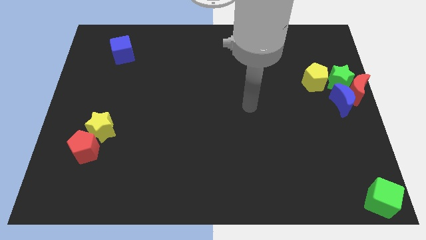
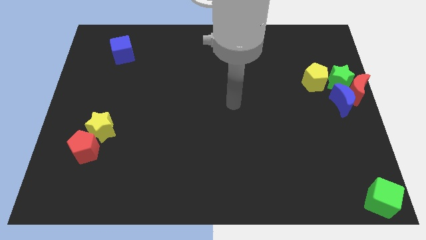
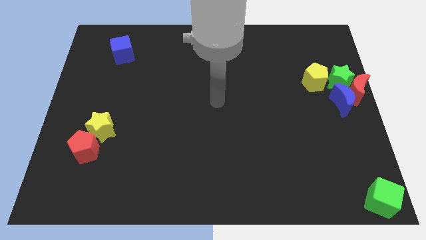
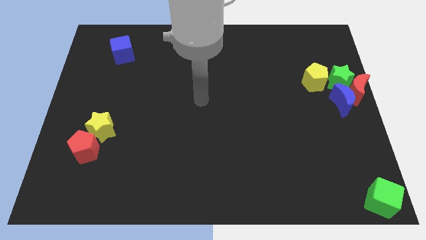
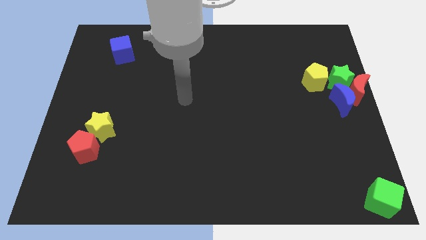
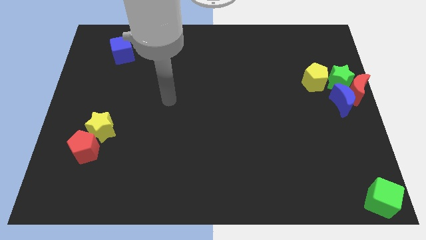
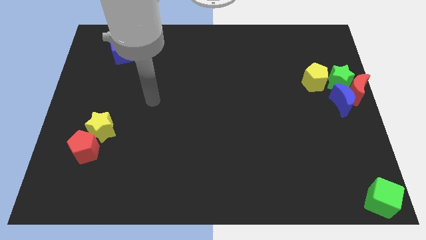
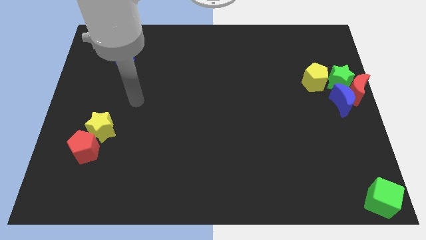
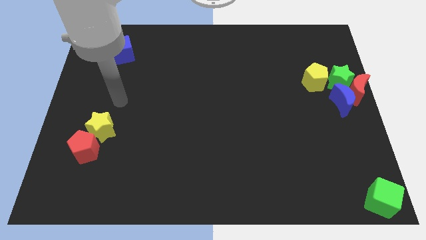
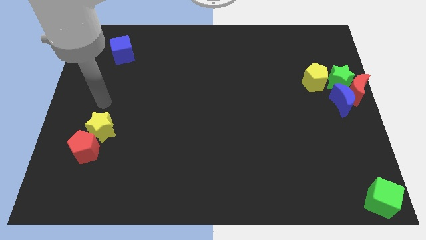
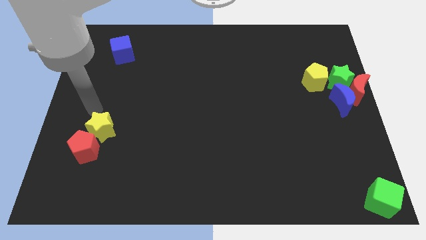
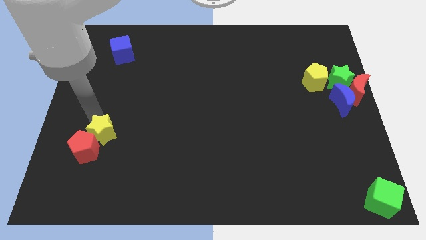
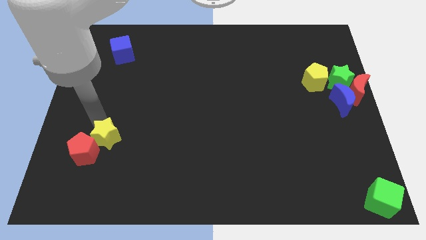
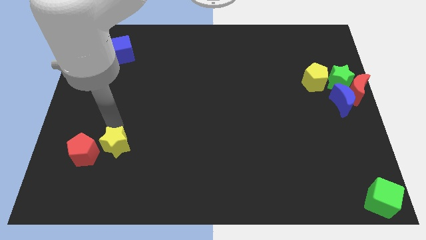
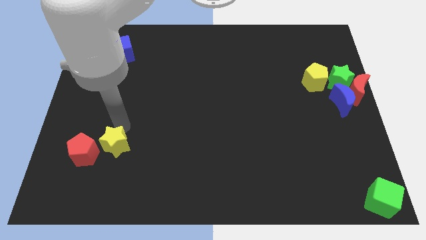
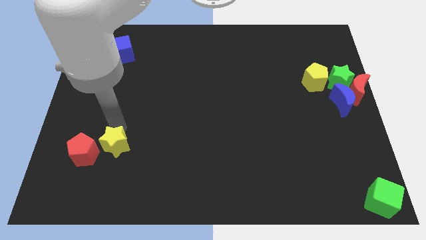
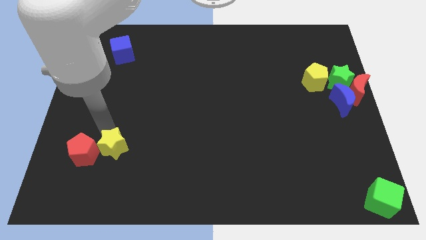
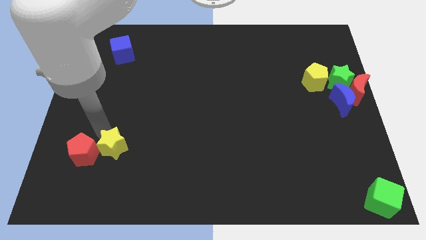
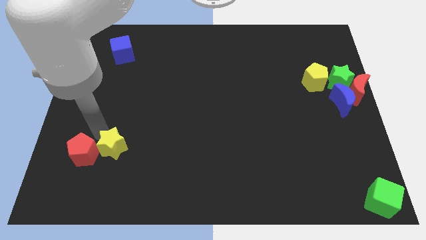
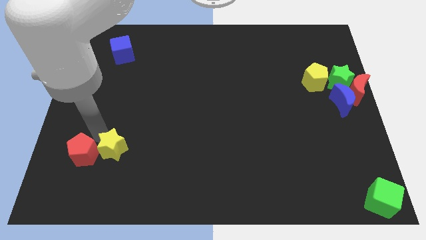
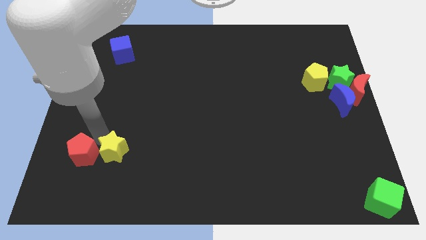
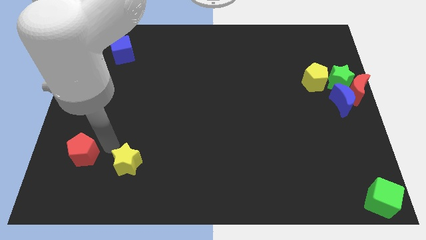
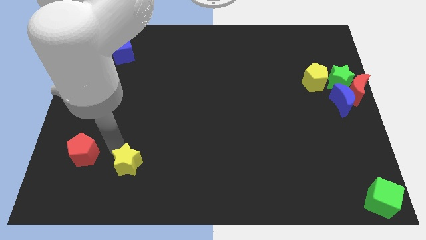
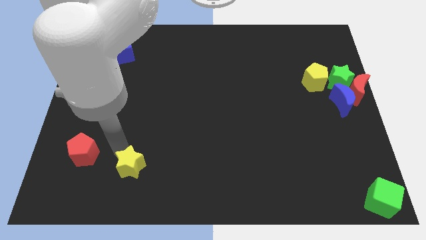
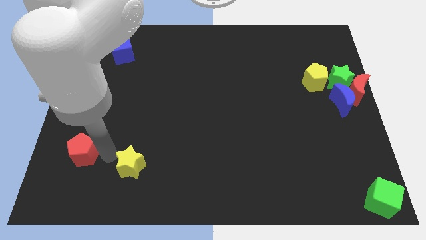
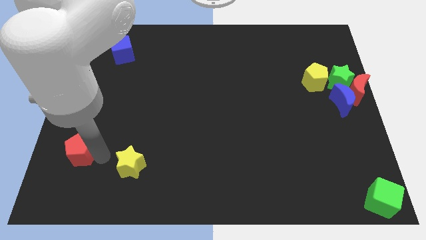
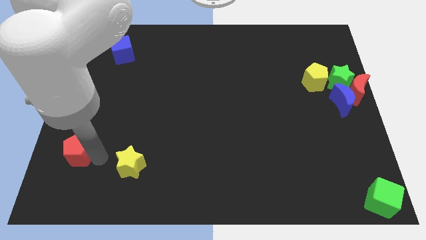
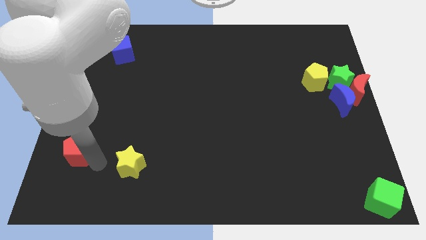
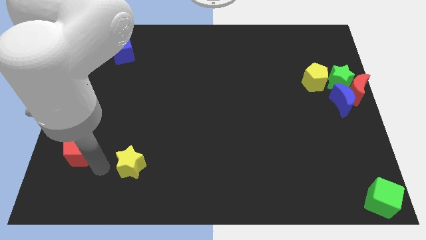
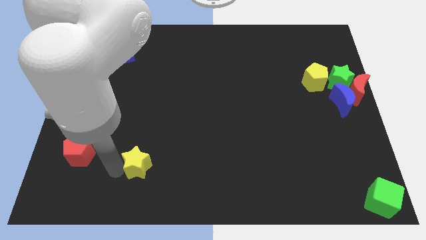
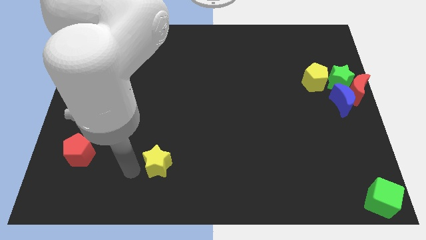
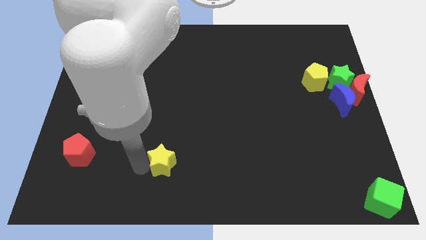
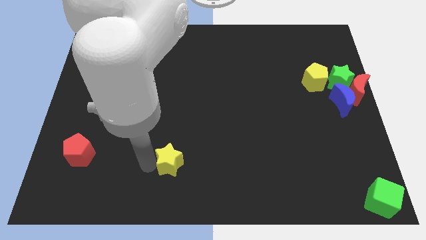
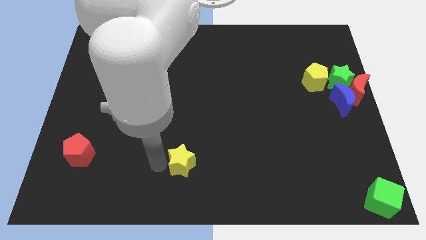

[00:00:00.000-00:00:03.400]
push the yellow star

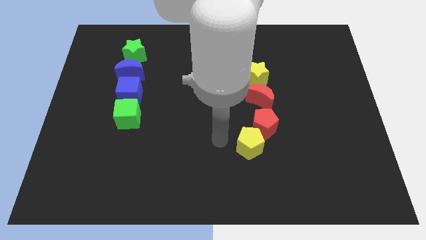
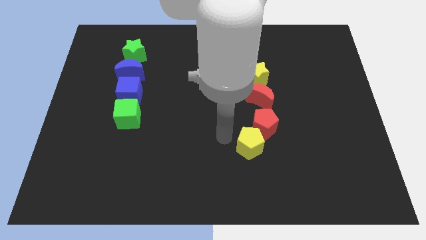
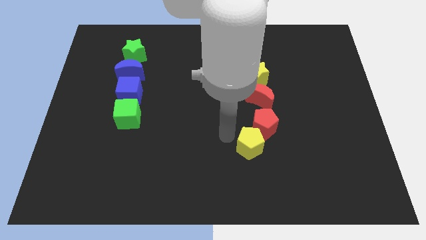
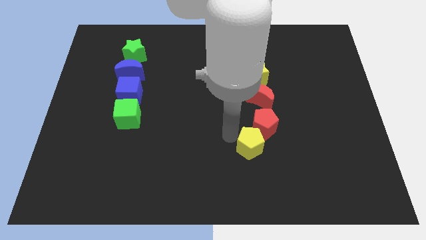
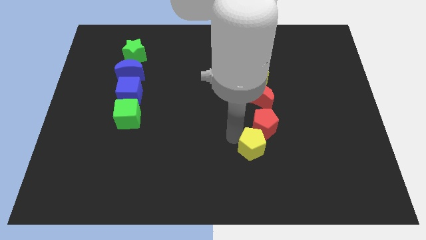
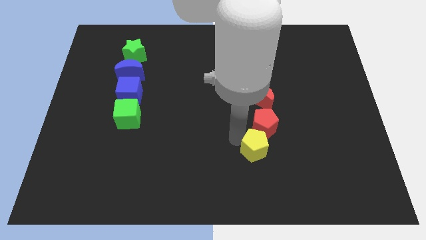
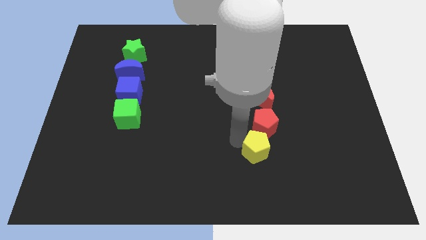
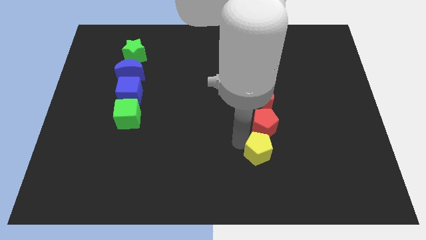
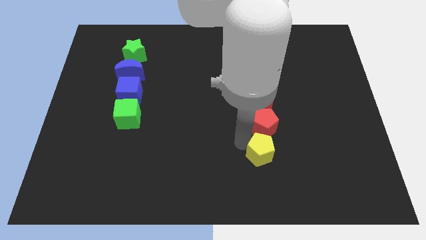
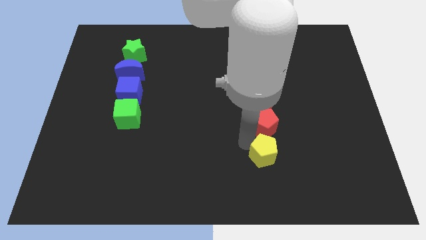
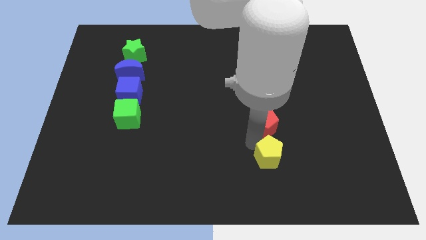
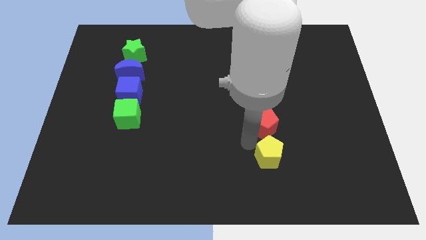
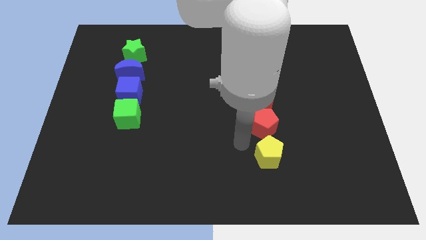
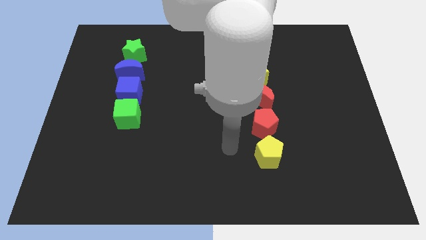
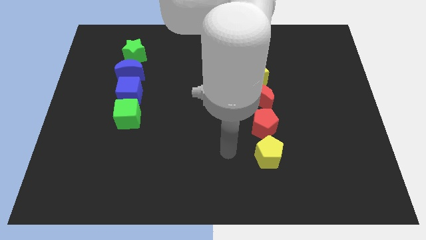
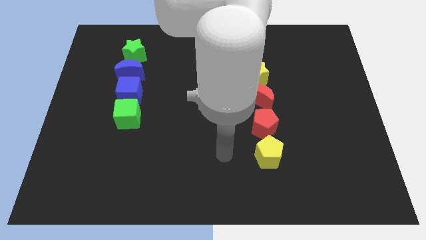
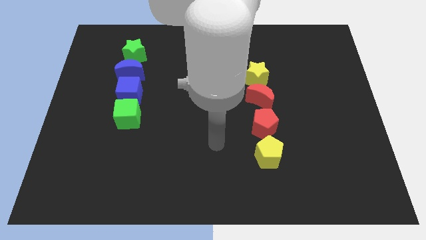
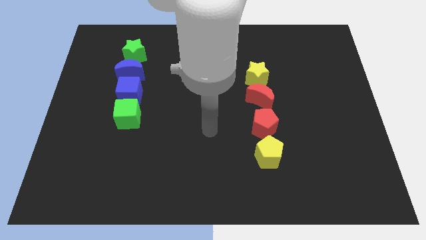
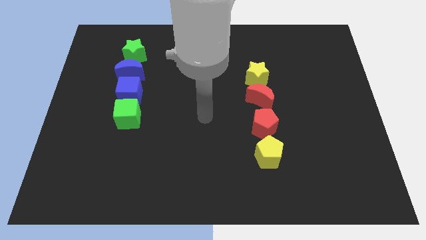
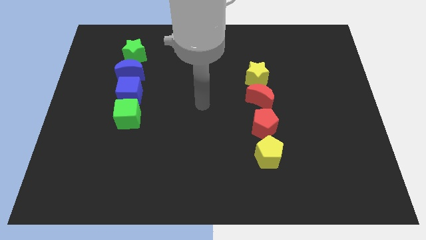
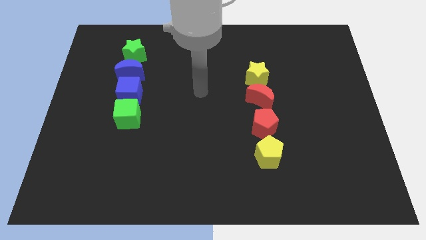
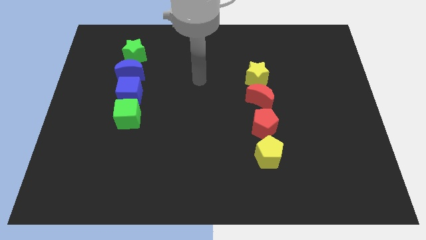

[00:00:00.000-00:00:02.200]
place the yellow pentagon below the red pentagon

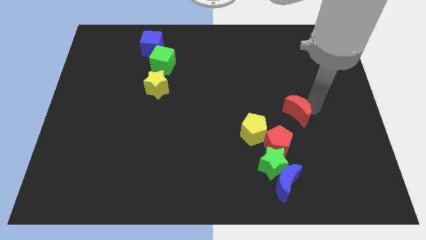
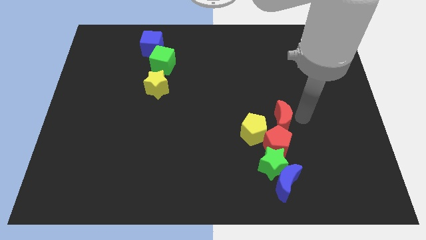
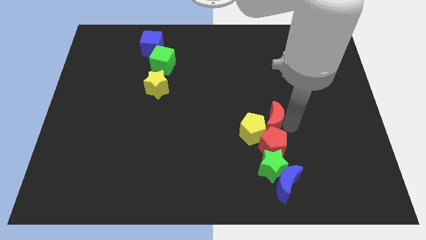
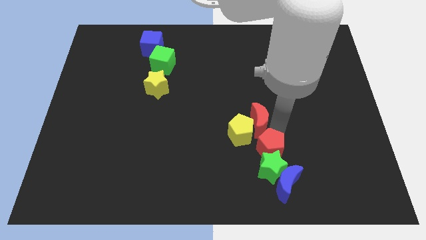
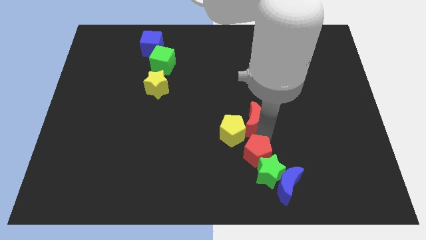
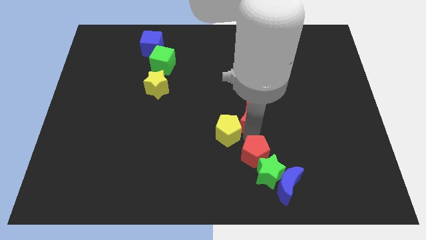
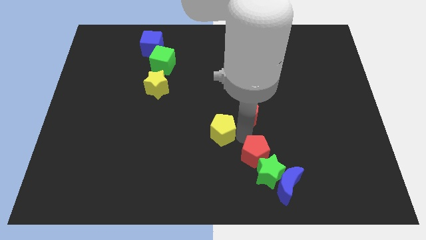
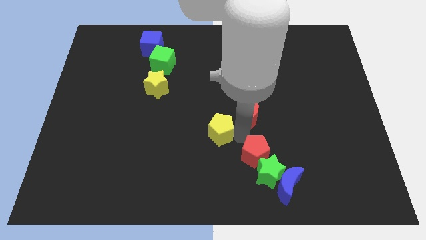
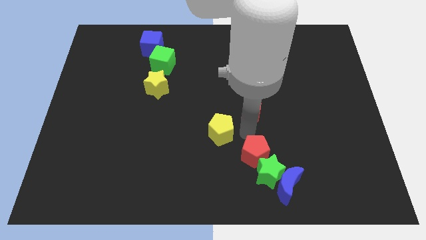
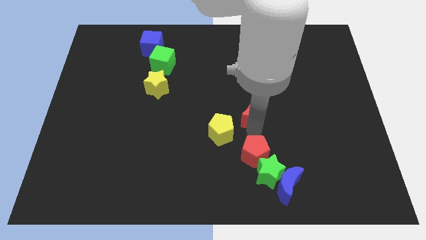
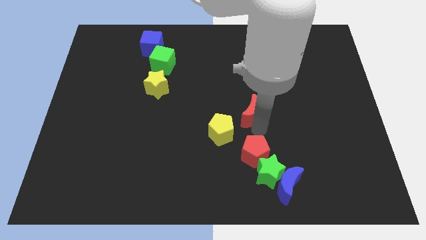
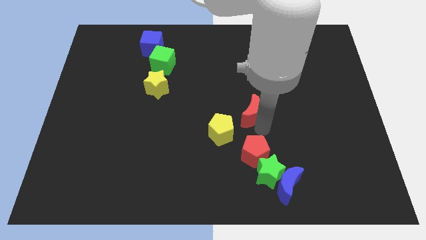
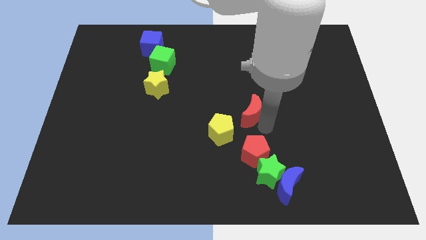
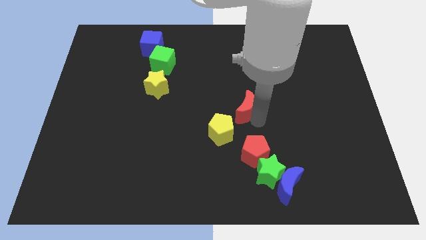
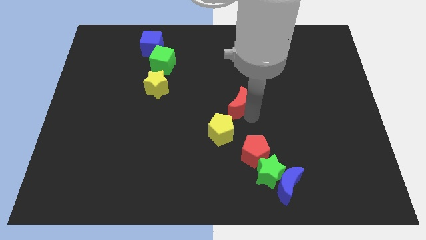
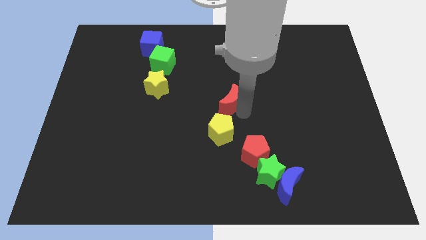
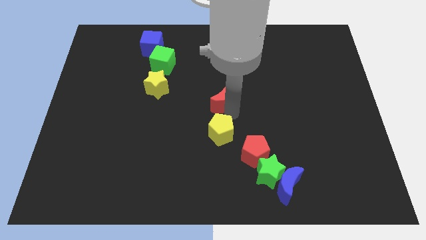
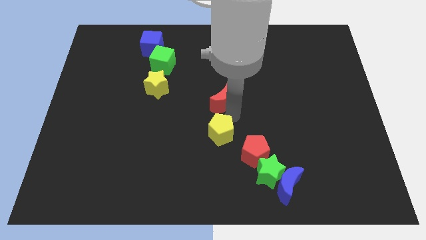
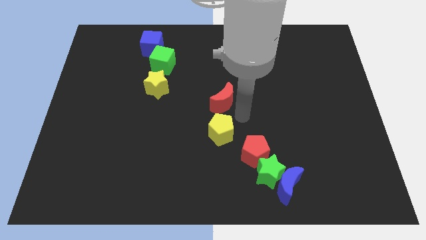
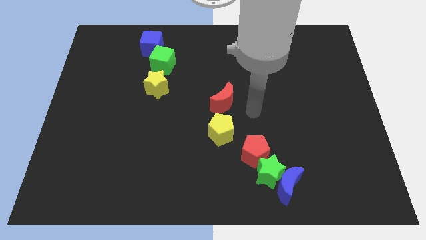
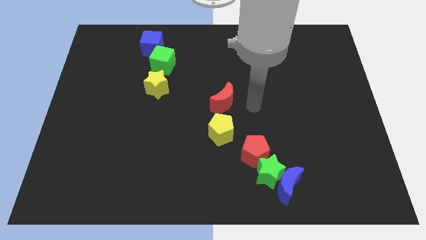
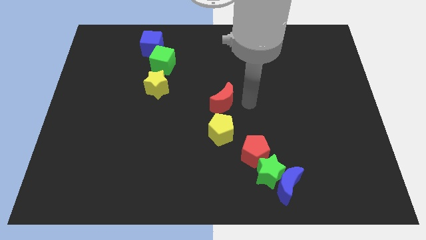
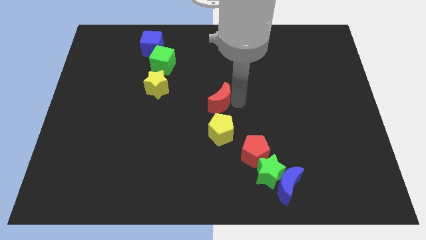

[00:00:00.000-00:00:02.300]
push the red crescent to the top of the yellow pentagon

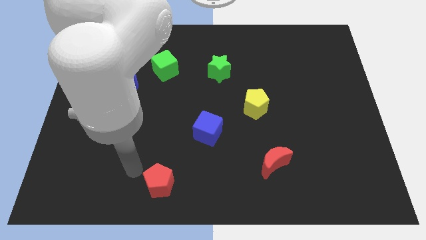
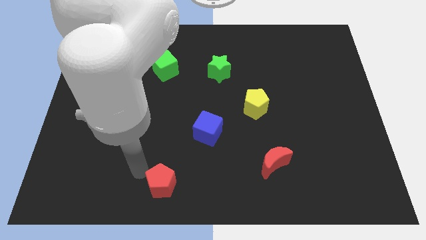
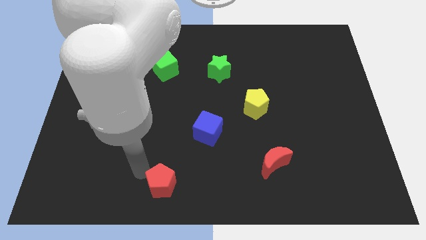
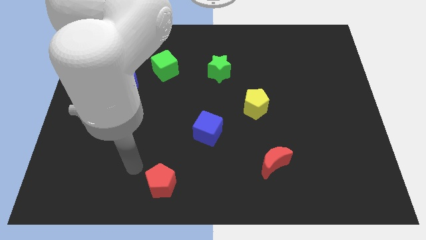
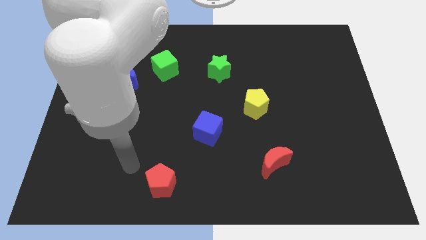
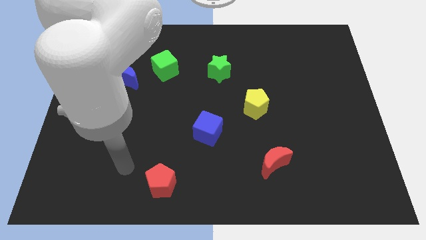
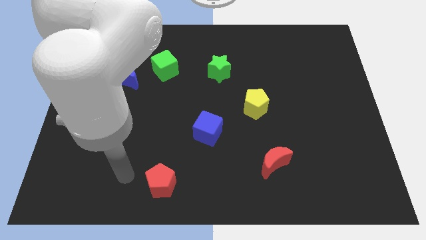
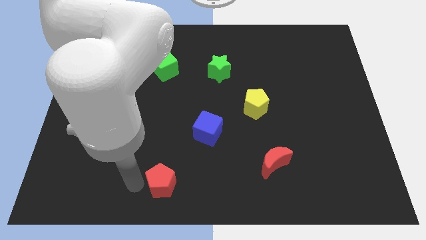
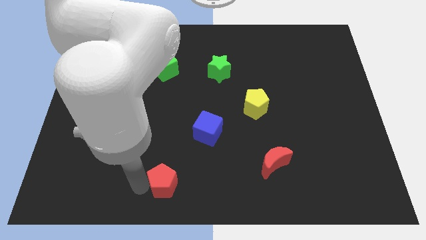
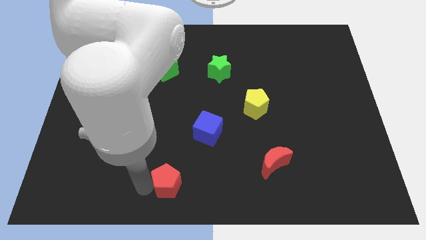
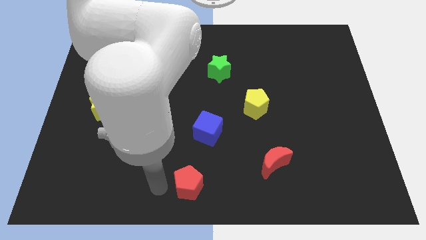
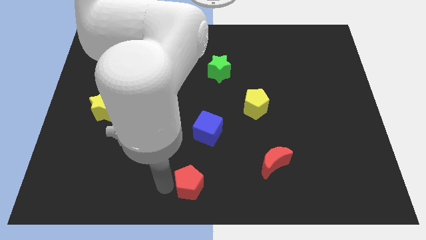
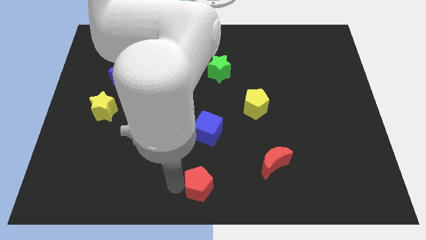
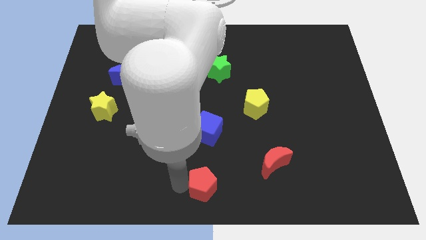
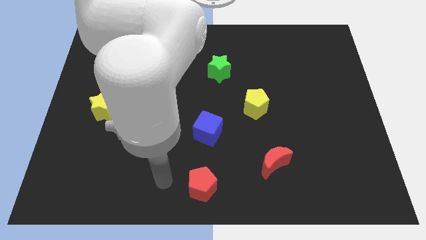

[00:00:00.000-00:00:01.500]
put the red pentagon to the bottom center of the board
